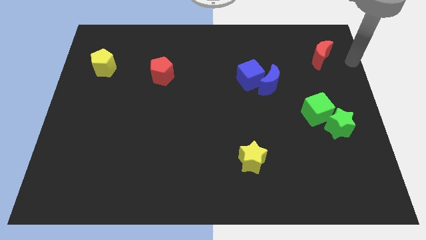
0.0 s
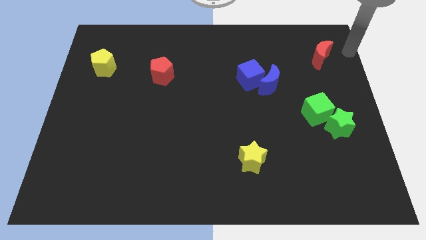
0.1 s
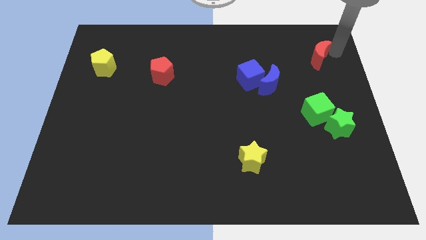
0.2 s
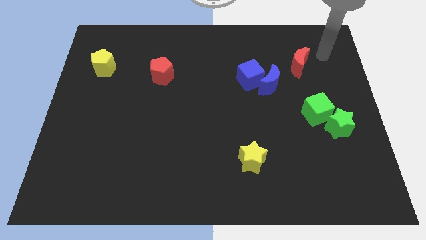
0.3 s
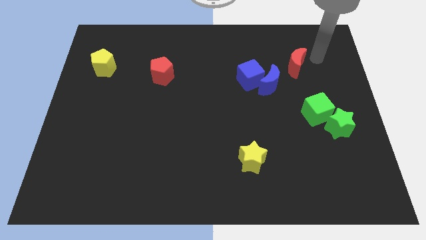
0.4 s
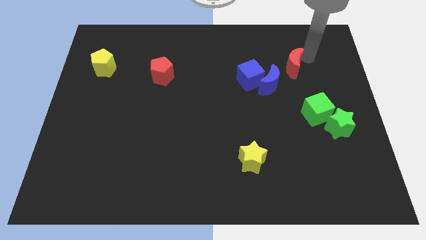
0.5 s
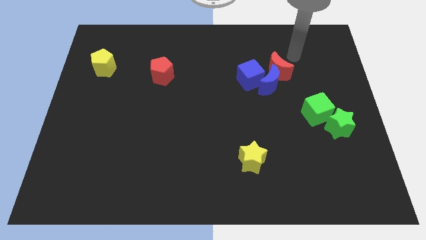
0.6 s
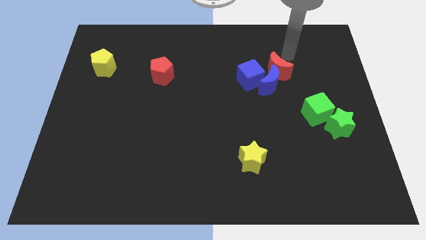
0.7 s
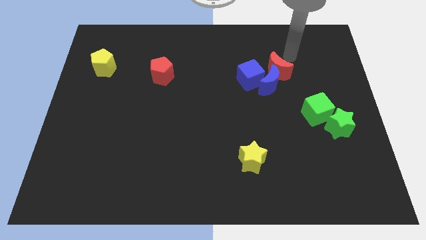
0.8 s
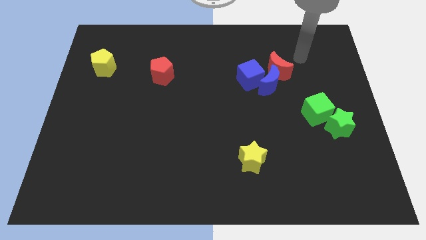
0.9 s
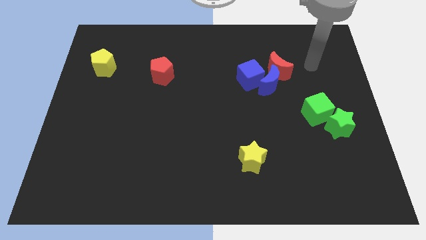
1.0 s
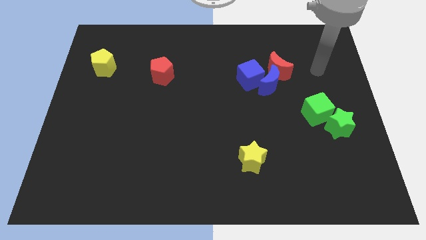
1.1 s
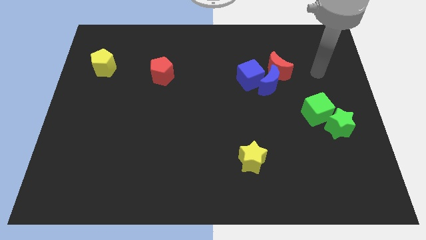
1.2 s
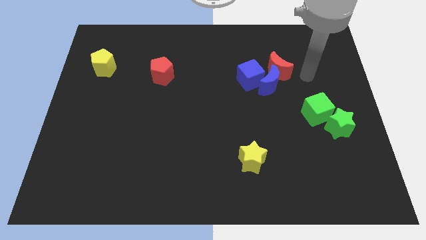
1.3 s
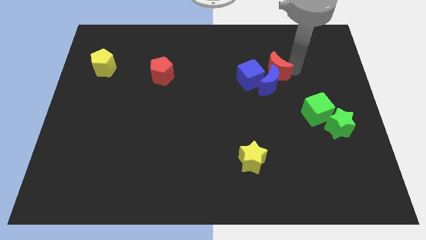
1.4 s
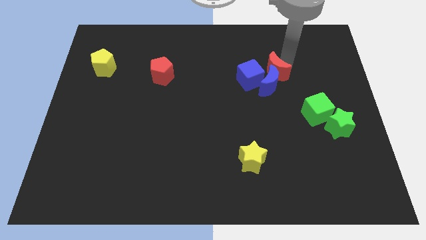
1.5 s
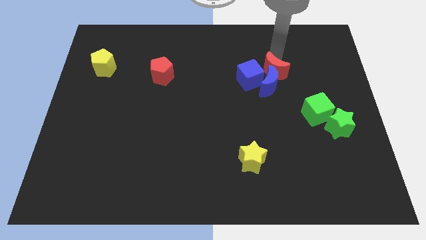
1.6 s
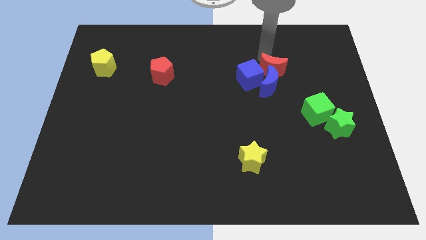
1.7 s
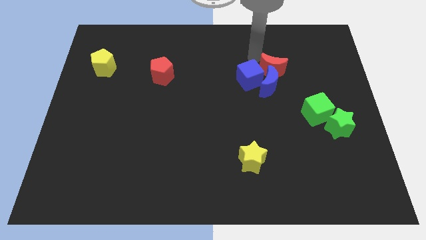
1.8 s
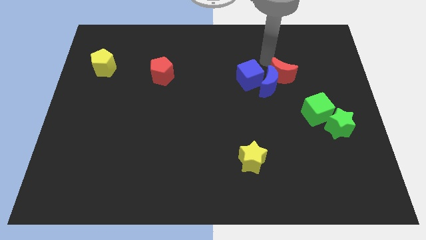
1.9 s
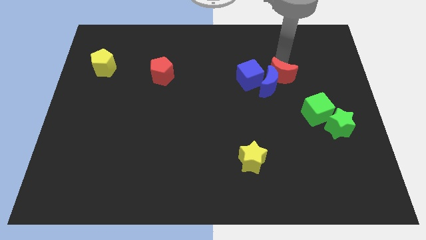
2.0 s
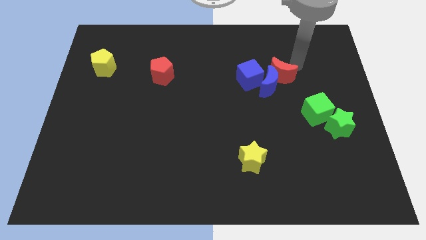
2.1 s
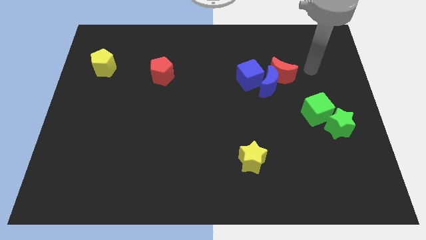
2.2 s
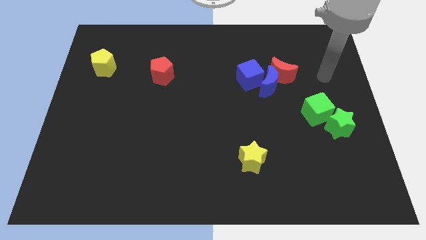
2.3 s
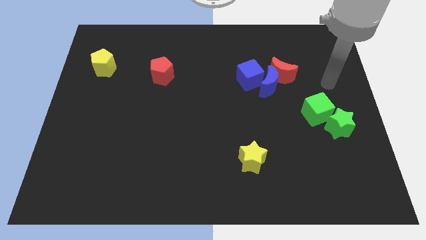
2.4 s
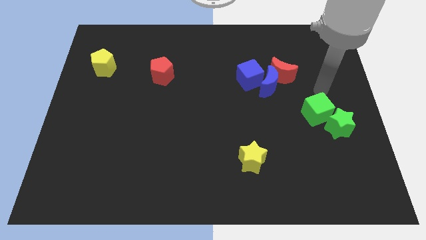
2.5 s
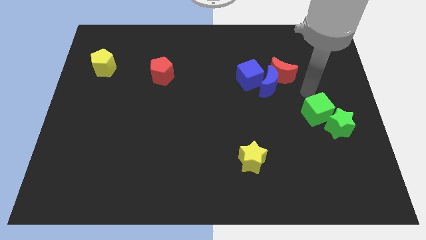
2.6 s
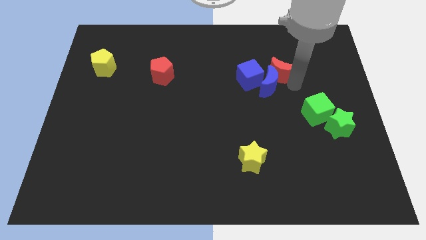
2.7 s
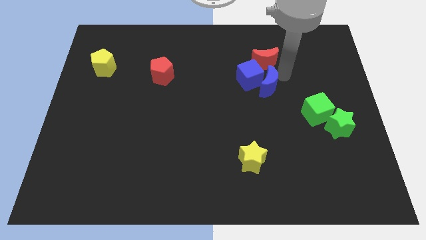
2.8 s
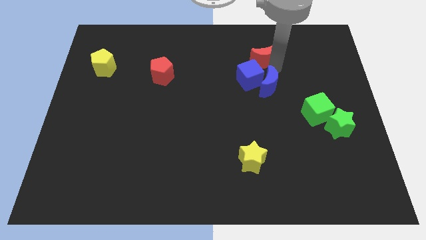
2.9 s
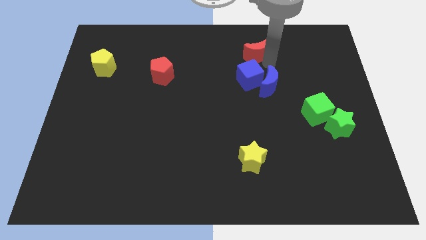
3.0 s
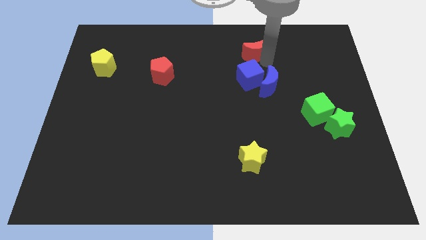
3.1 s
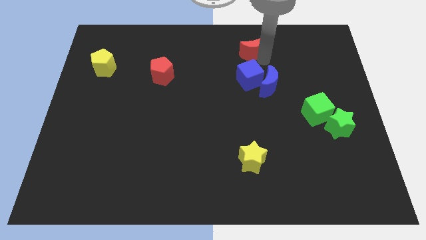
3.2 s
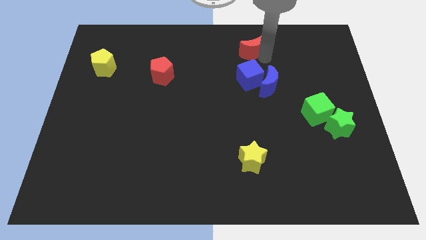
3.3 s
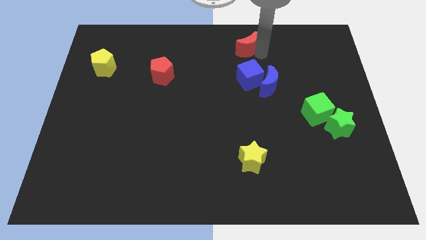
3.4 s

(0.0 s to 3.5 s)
move the red crescent above the blue cube

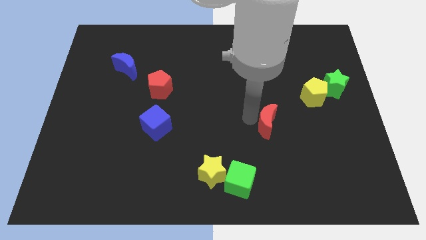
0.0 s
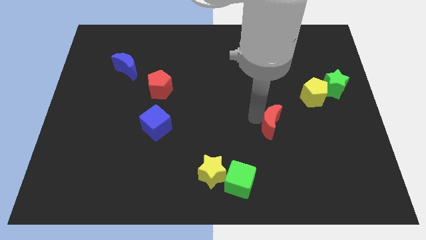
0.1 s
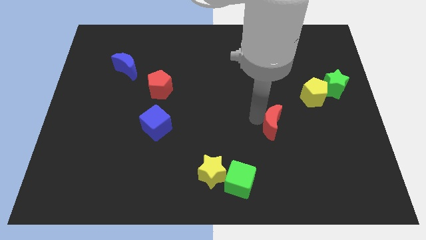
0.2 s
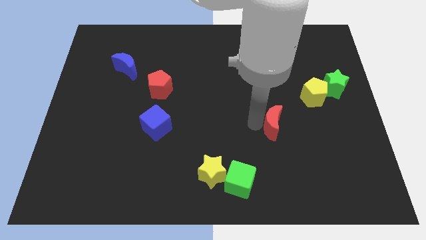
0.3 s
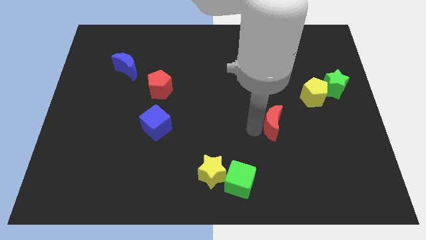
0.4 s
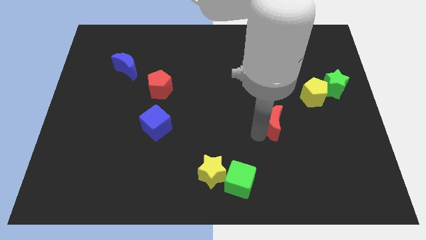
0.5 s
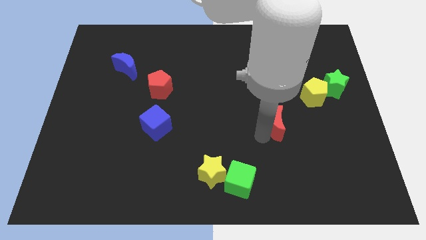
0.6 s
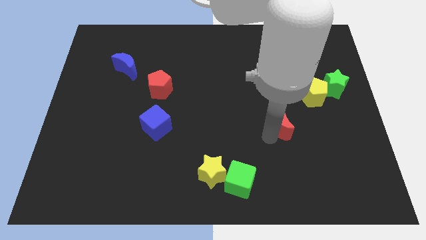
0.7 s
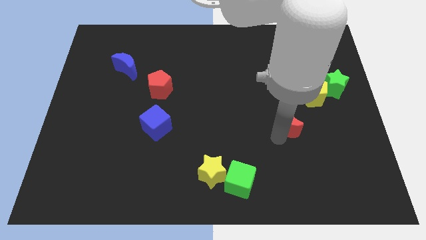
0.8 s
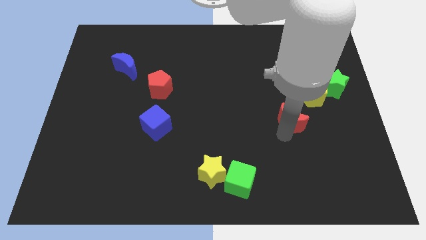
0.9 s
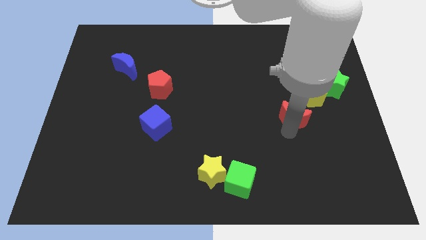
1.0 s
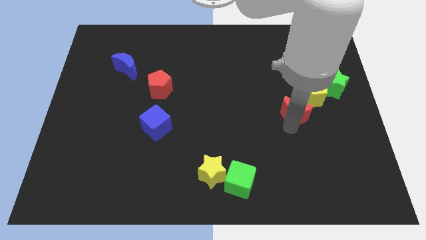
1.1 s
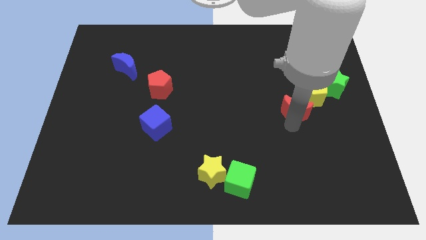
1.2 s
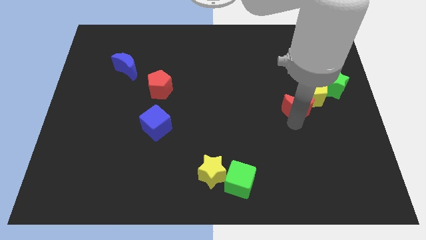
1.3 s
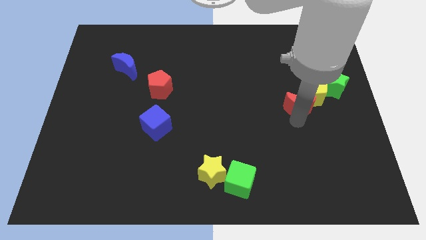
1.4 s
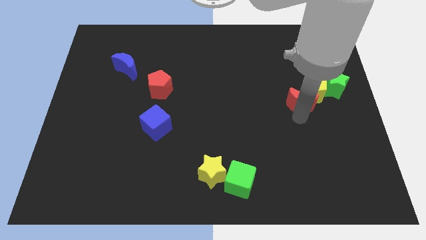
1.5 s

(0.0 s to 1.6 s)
place red crescent below yellow pentagon

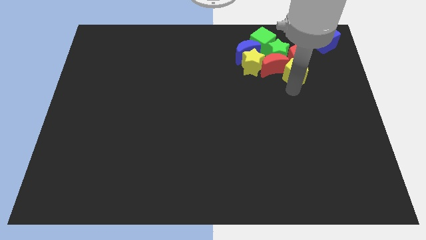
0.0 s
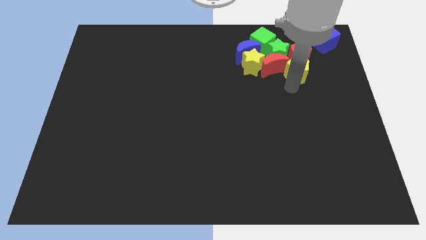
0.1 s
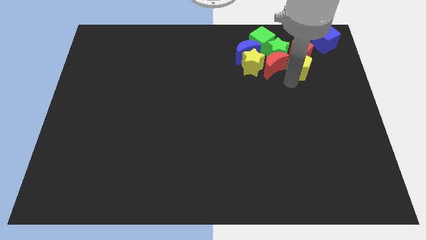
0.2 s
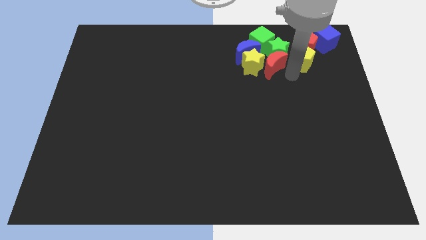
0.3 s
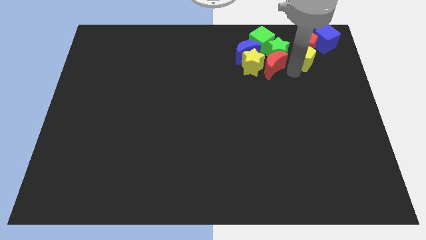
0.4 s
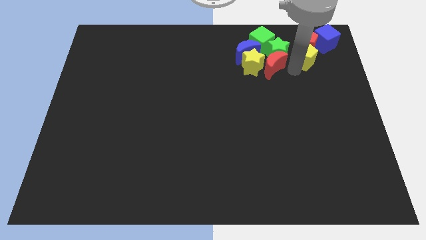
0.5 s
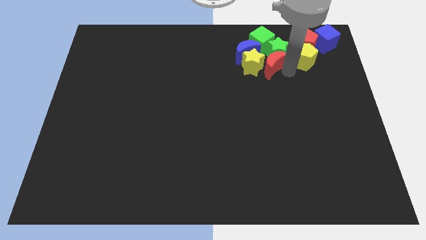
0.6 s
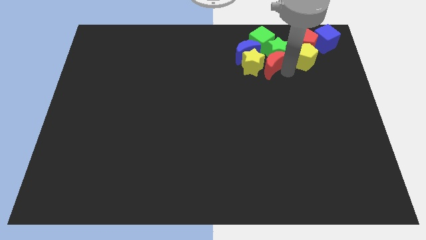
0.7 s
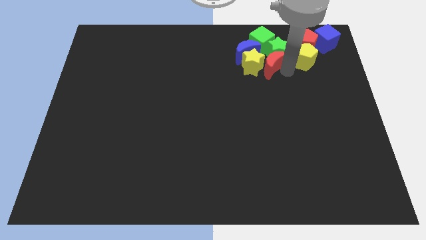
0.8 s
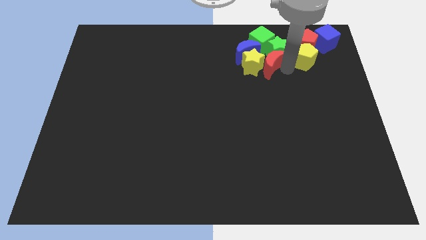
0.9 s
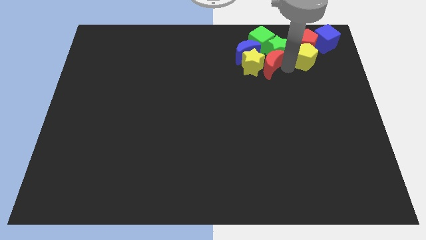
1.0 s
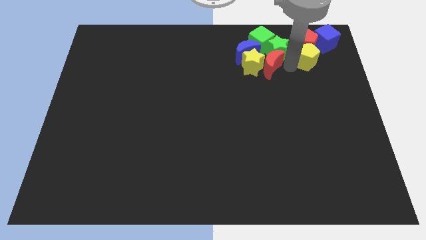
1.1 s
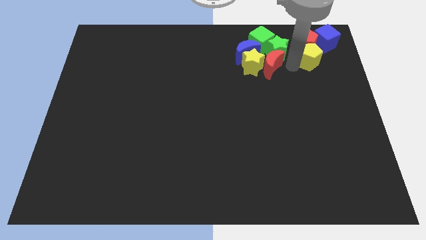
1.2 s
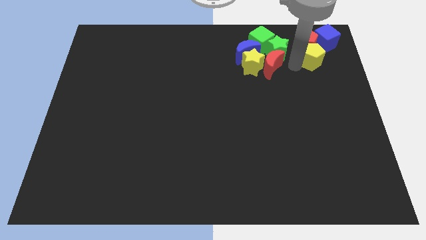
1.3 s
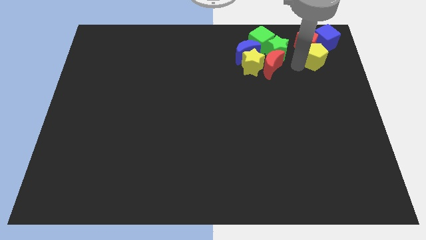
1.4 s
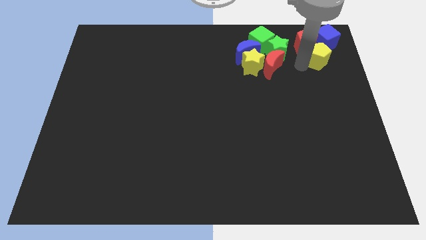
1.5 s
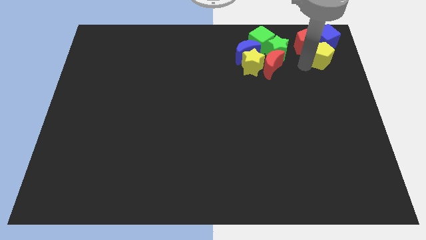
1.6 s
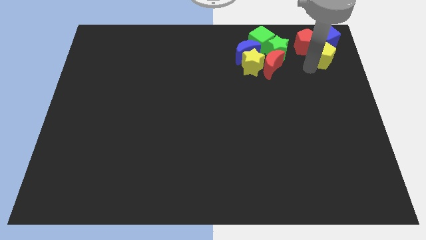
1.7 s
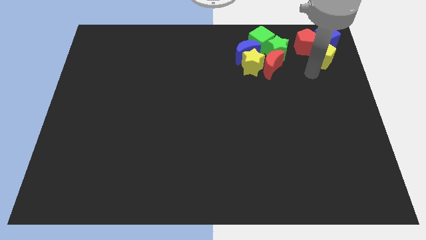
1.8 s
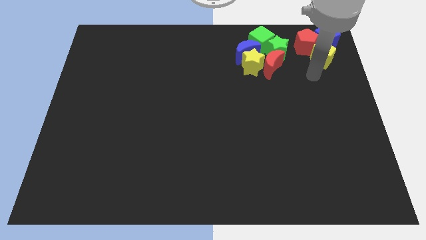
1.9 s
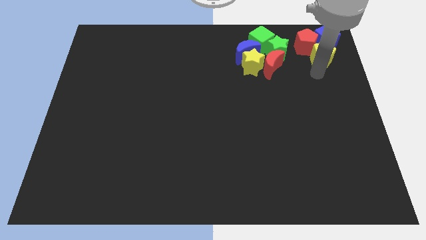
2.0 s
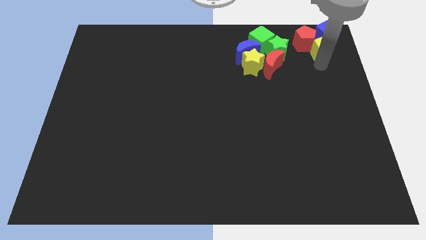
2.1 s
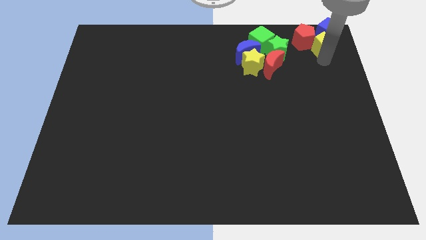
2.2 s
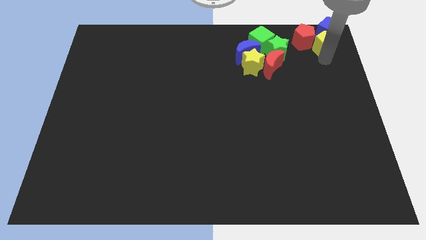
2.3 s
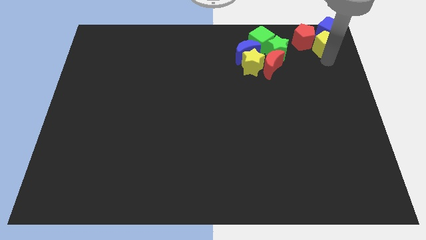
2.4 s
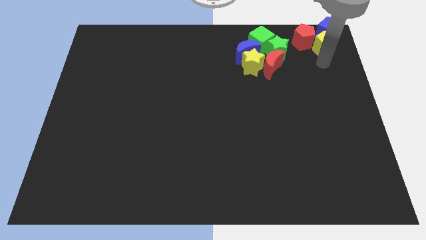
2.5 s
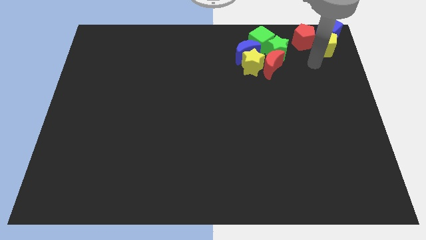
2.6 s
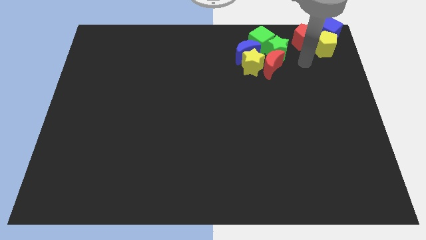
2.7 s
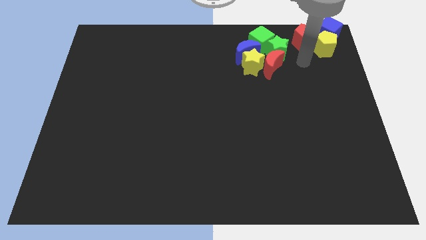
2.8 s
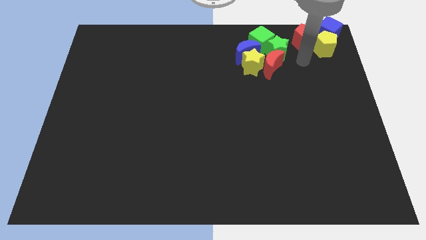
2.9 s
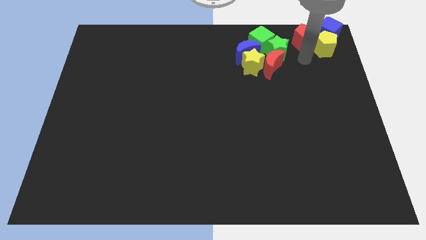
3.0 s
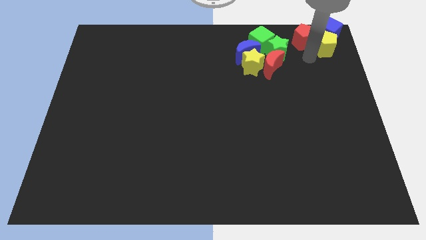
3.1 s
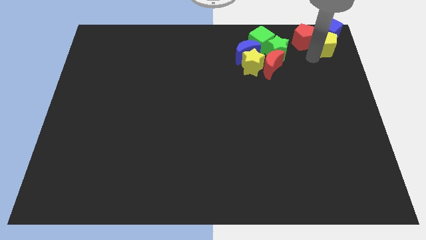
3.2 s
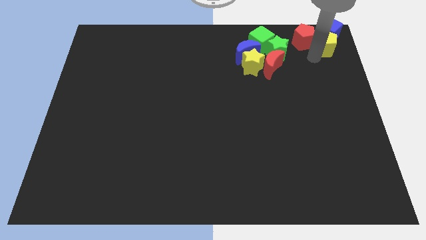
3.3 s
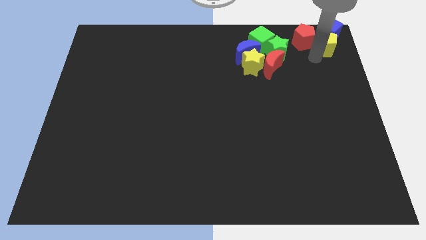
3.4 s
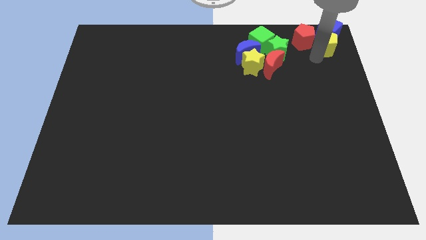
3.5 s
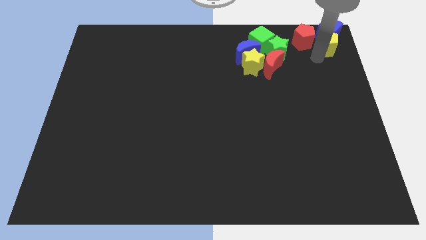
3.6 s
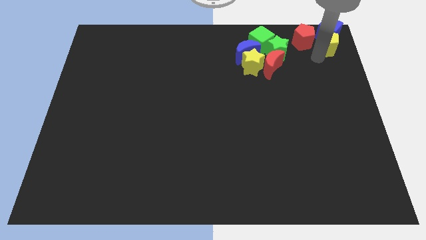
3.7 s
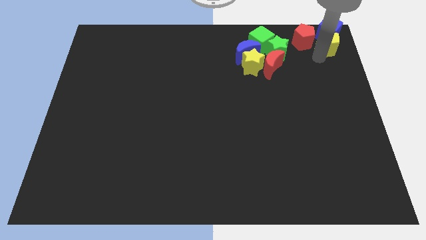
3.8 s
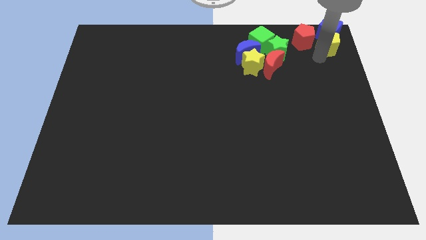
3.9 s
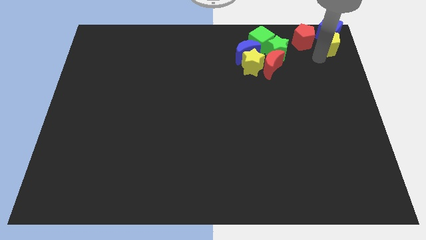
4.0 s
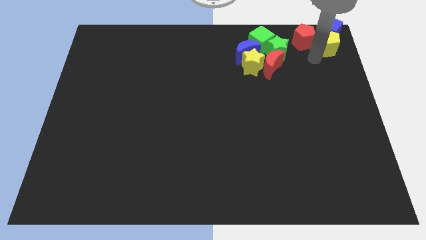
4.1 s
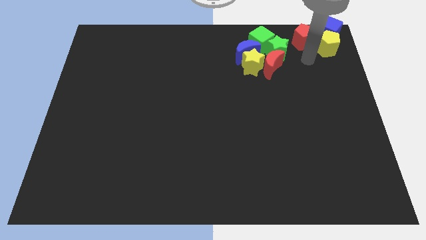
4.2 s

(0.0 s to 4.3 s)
place the yellow pentagon to the bottom of blue cube
